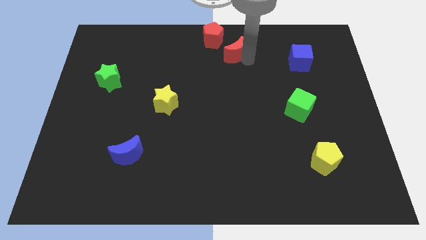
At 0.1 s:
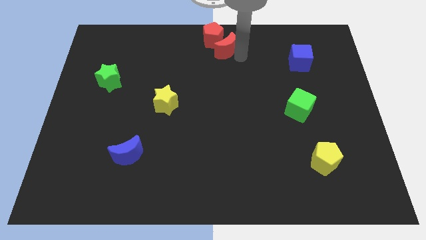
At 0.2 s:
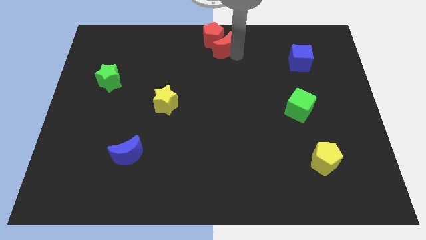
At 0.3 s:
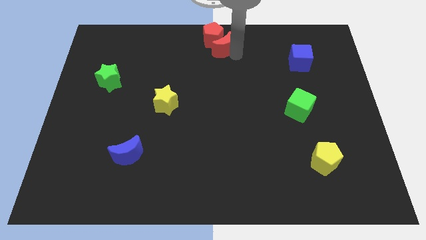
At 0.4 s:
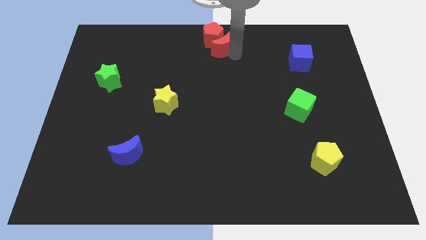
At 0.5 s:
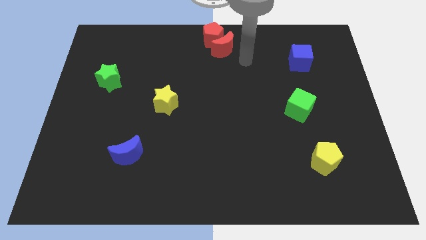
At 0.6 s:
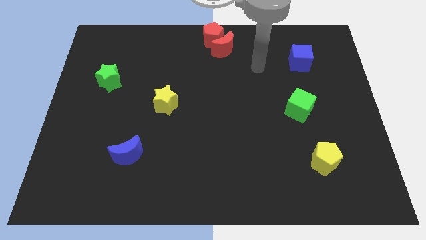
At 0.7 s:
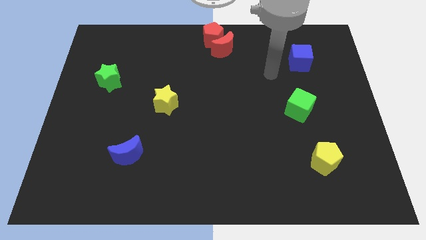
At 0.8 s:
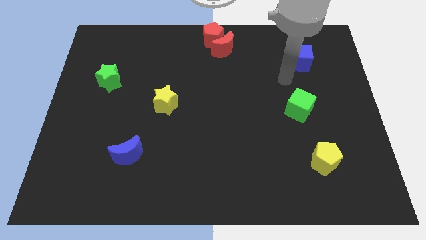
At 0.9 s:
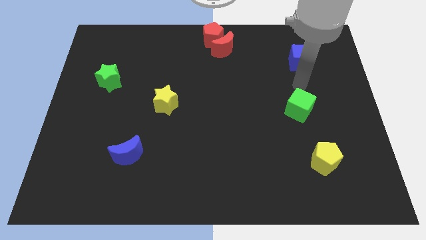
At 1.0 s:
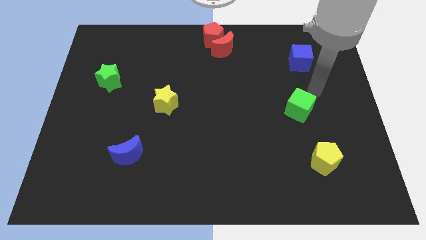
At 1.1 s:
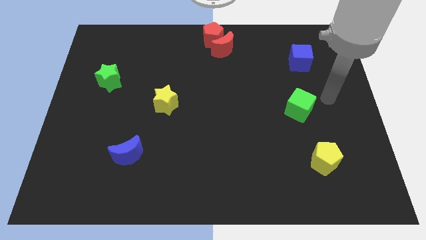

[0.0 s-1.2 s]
place the red crescent close to the red pentagon

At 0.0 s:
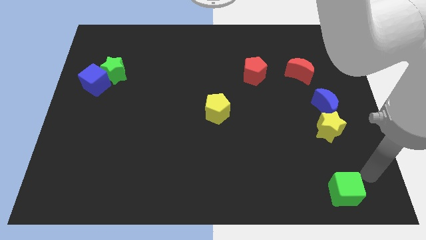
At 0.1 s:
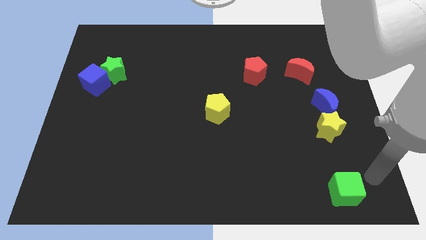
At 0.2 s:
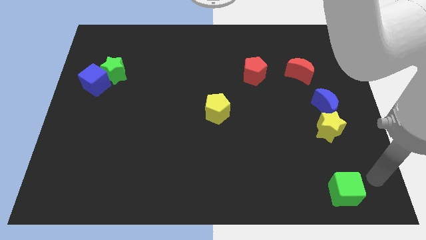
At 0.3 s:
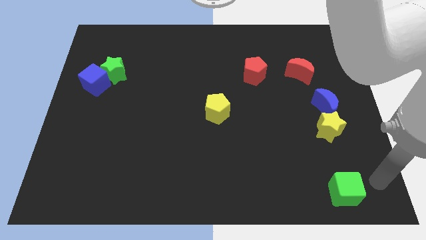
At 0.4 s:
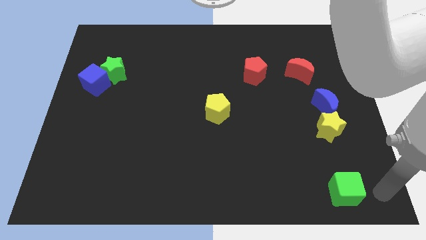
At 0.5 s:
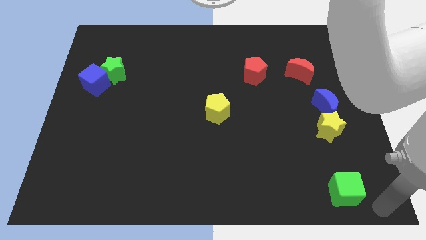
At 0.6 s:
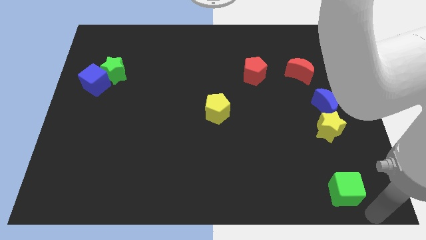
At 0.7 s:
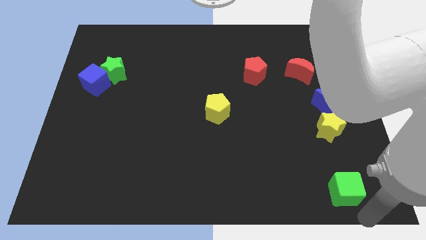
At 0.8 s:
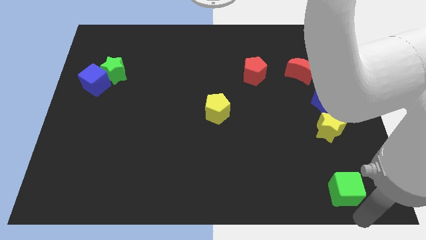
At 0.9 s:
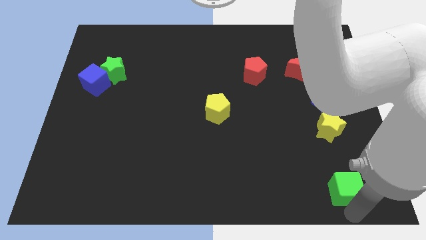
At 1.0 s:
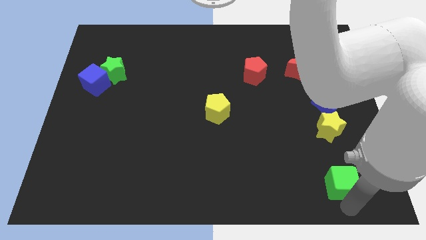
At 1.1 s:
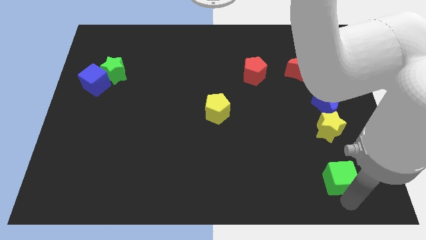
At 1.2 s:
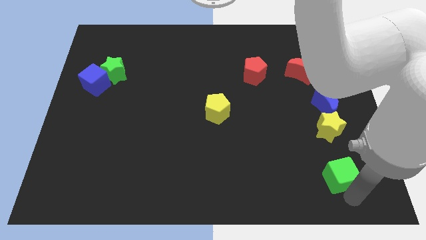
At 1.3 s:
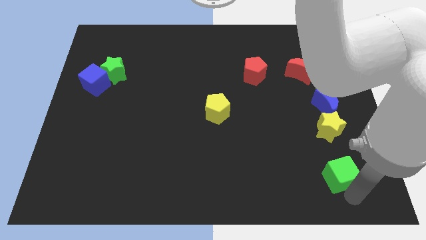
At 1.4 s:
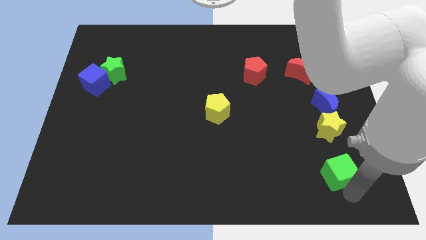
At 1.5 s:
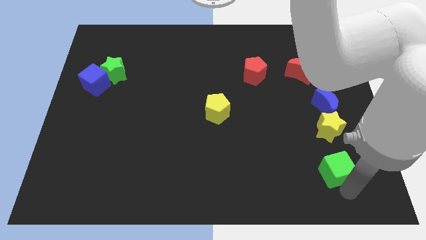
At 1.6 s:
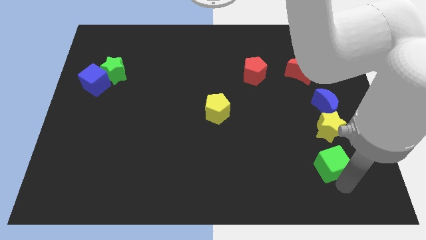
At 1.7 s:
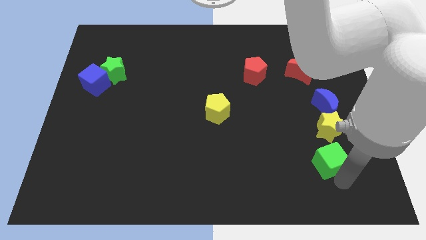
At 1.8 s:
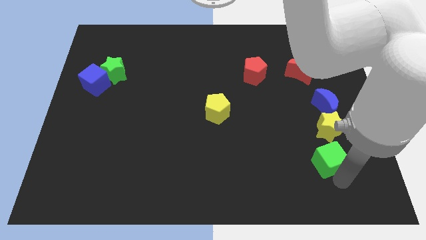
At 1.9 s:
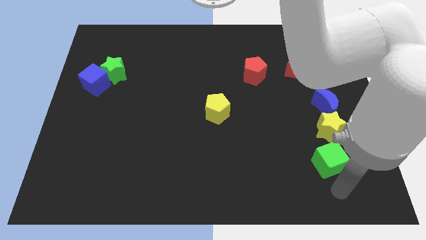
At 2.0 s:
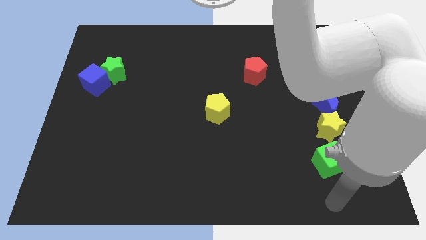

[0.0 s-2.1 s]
push green cube slightly up

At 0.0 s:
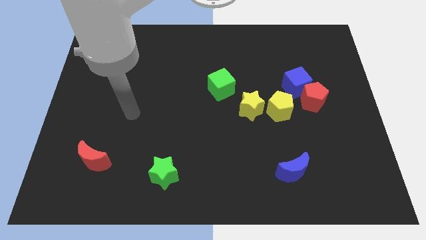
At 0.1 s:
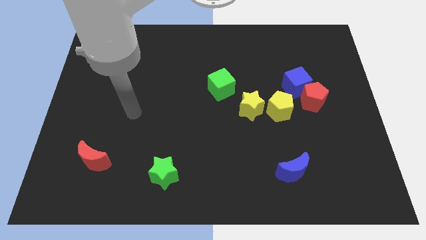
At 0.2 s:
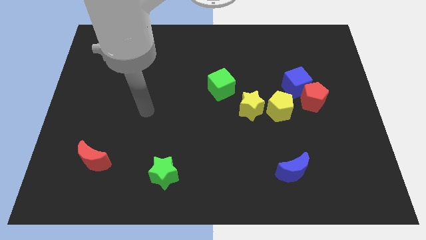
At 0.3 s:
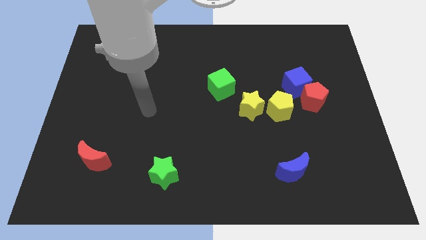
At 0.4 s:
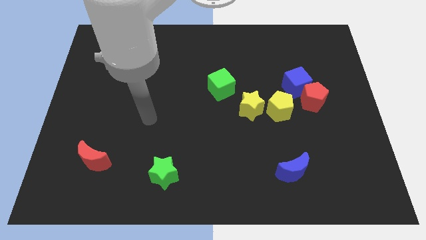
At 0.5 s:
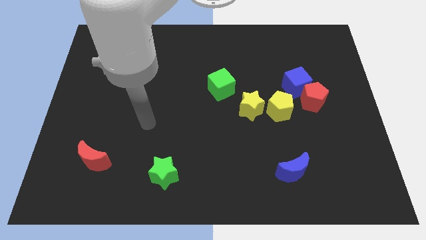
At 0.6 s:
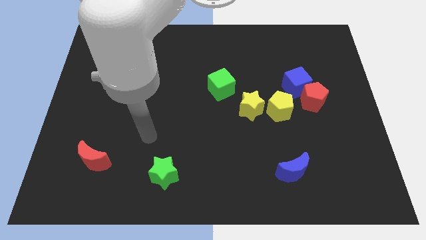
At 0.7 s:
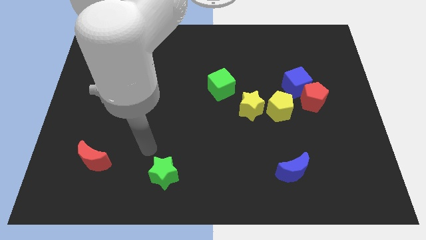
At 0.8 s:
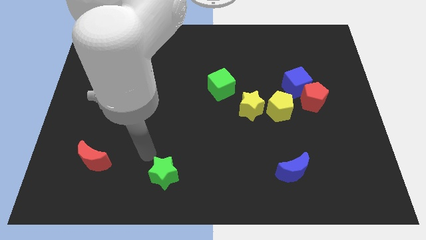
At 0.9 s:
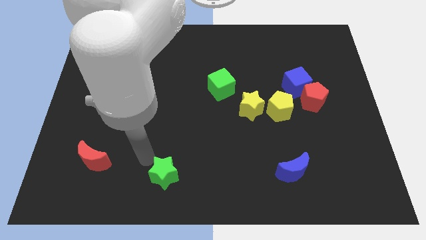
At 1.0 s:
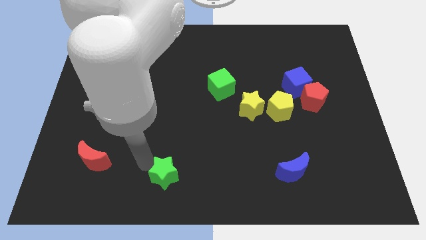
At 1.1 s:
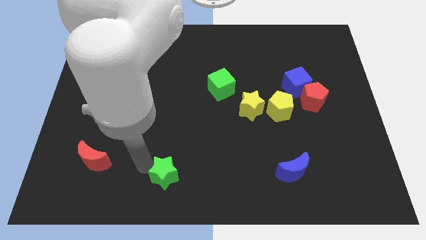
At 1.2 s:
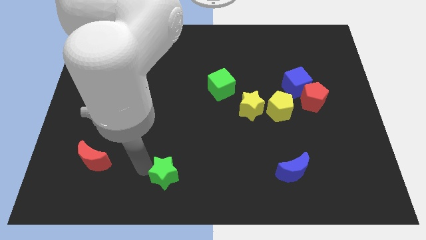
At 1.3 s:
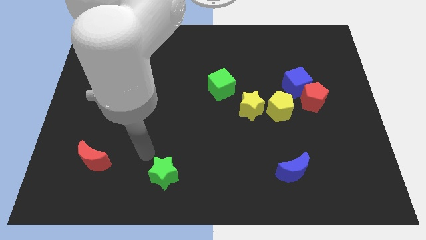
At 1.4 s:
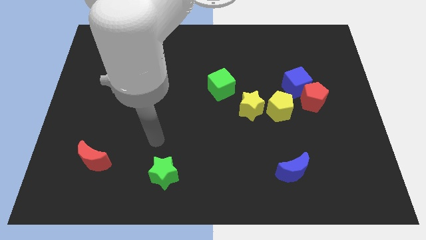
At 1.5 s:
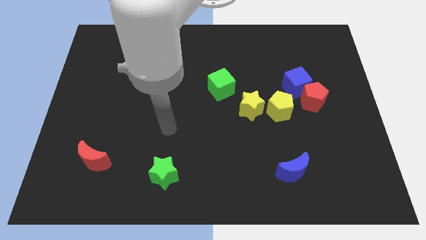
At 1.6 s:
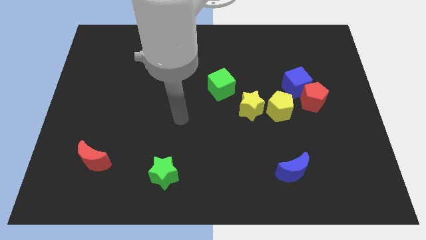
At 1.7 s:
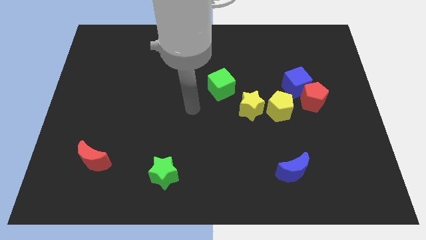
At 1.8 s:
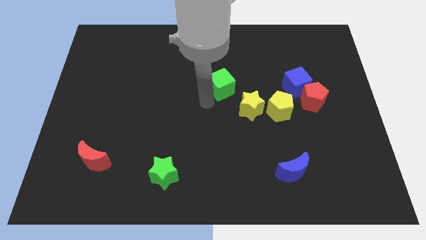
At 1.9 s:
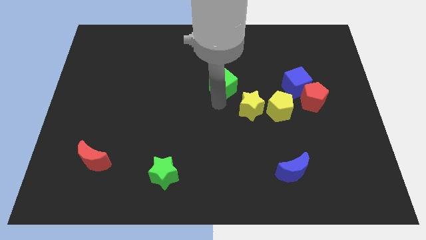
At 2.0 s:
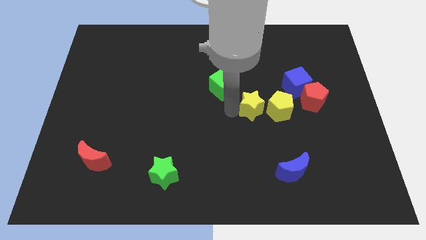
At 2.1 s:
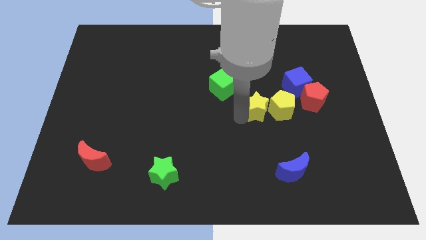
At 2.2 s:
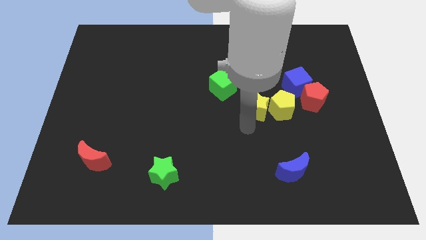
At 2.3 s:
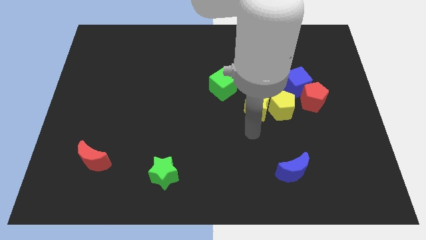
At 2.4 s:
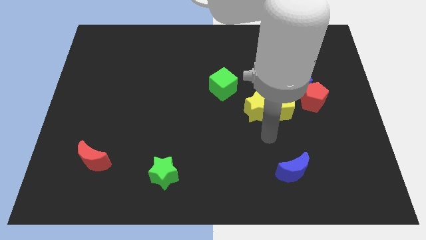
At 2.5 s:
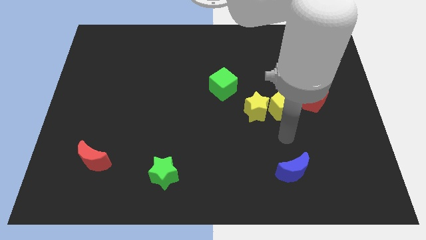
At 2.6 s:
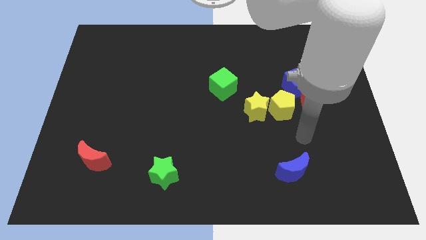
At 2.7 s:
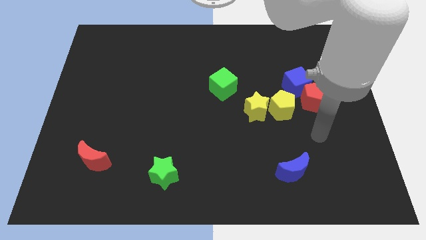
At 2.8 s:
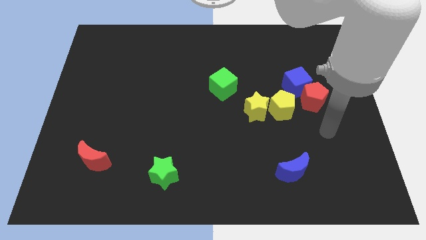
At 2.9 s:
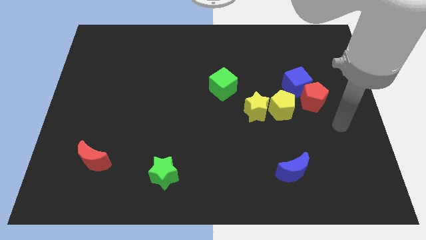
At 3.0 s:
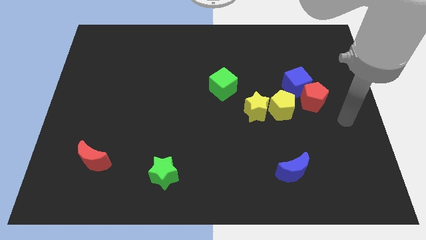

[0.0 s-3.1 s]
place the arm at the right center of the board

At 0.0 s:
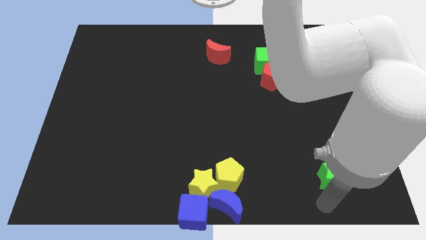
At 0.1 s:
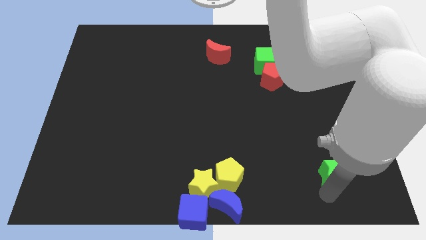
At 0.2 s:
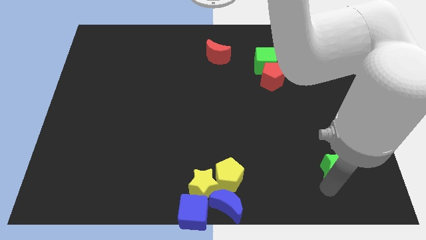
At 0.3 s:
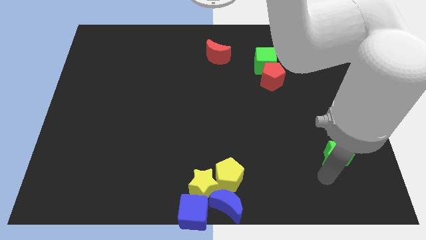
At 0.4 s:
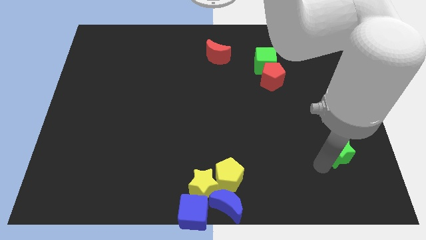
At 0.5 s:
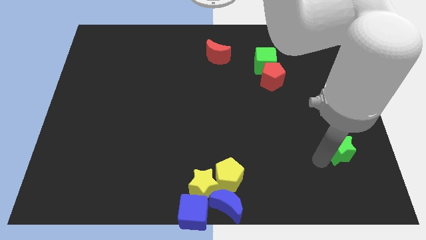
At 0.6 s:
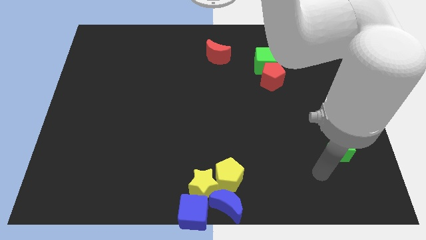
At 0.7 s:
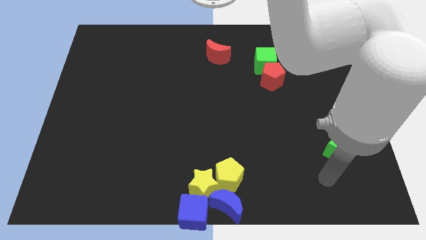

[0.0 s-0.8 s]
push the green star slightly to the top of the board

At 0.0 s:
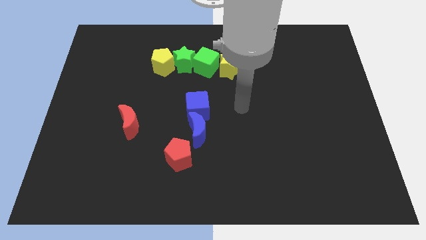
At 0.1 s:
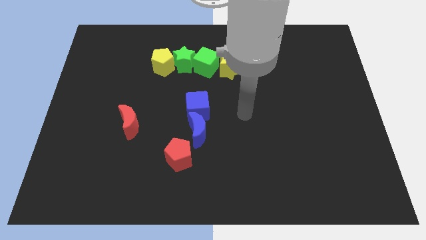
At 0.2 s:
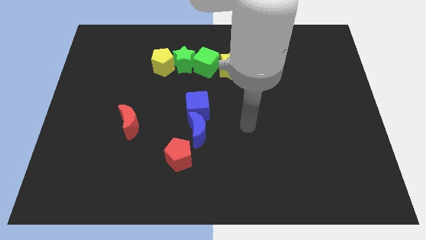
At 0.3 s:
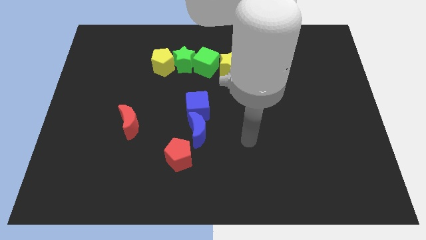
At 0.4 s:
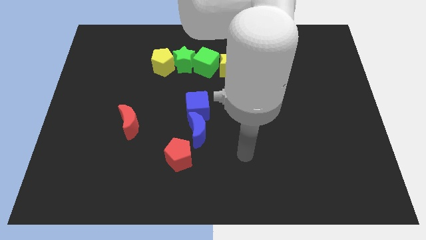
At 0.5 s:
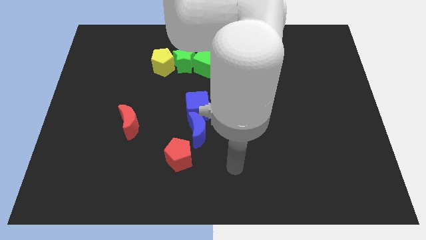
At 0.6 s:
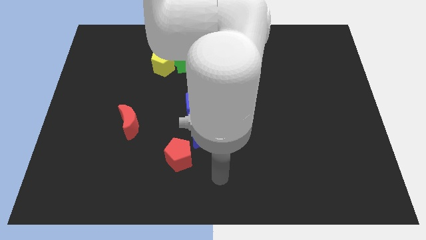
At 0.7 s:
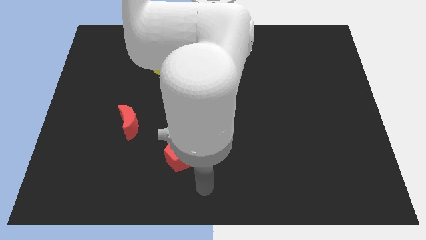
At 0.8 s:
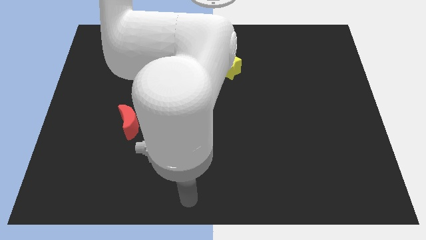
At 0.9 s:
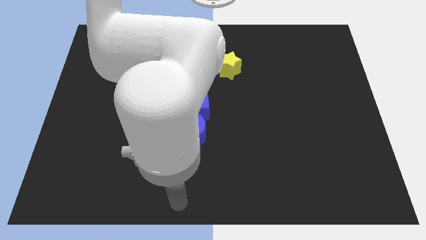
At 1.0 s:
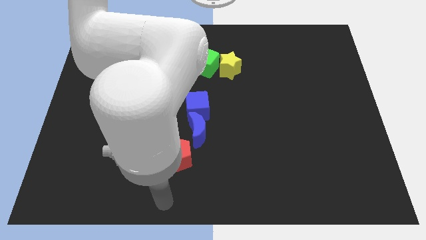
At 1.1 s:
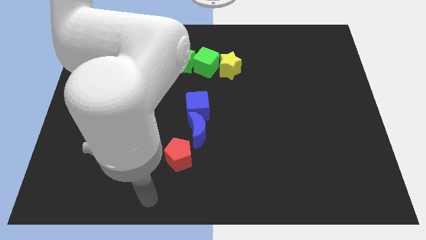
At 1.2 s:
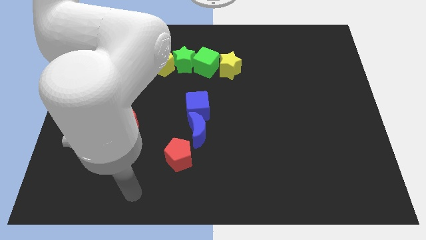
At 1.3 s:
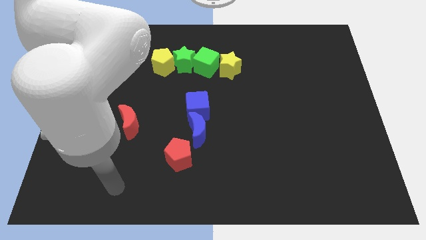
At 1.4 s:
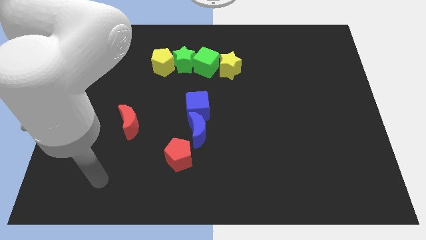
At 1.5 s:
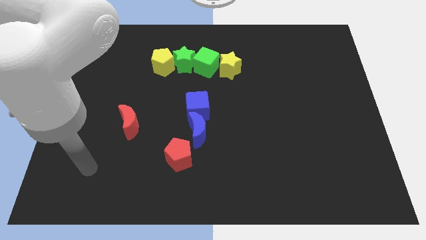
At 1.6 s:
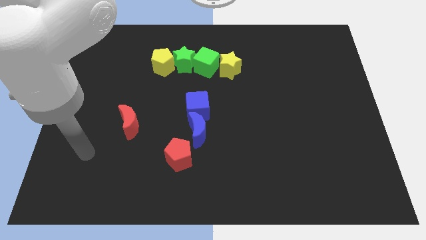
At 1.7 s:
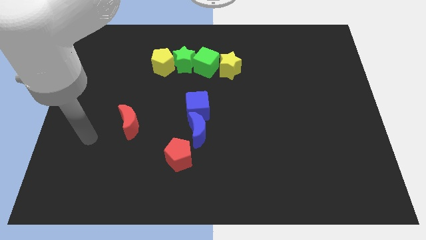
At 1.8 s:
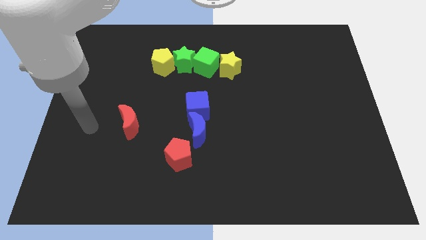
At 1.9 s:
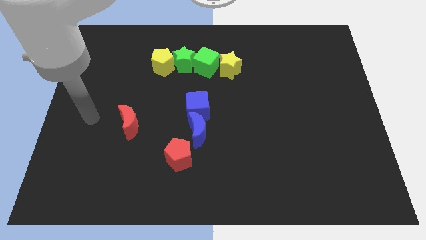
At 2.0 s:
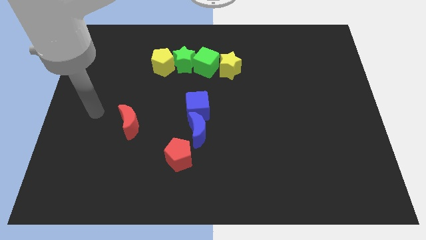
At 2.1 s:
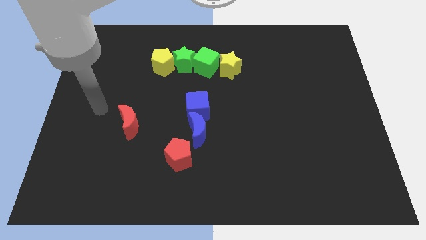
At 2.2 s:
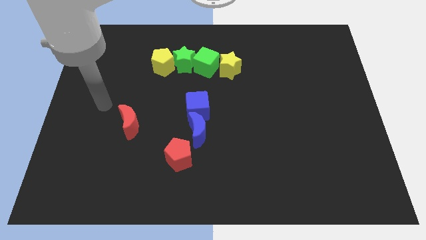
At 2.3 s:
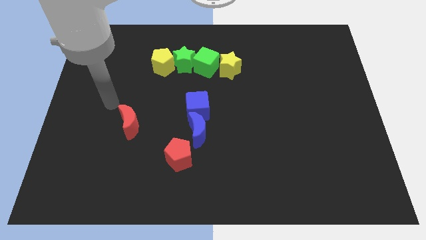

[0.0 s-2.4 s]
move your arm to the left of the red moon
